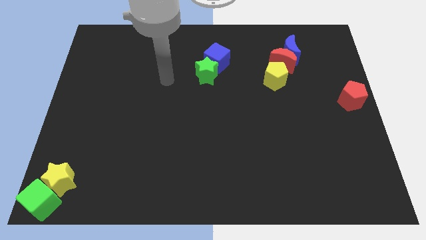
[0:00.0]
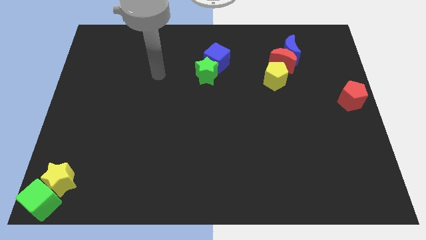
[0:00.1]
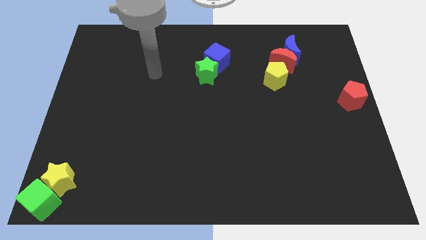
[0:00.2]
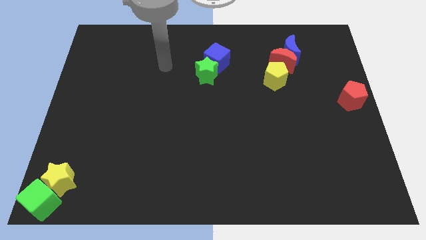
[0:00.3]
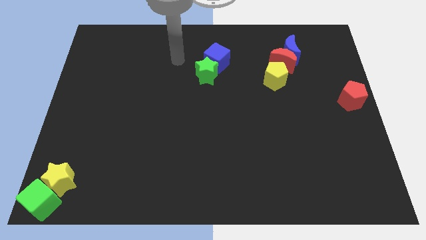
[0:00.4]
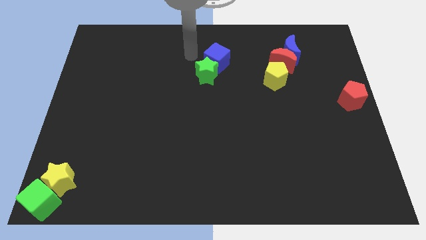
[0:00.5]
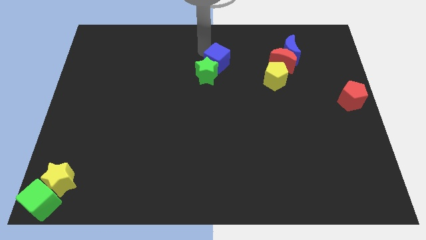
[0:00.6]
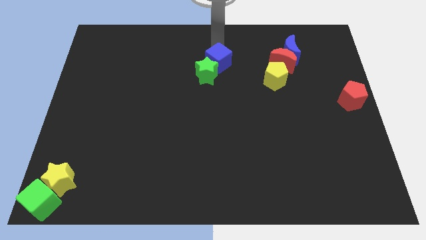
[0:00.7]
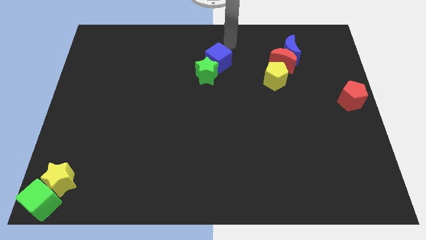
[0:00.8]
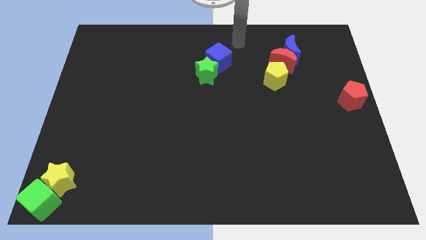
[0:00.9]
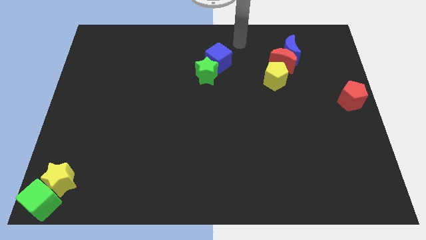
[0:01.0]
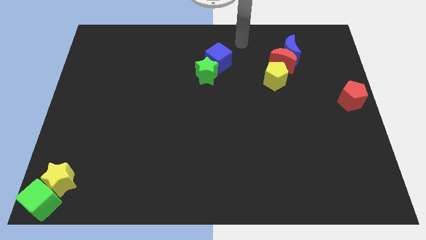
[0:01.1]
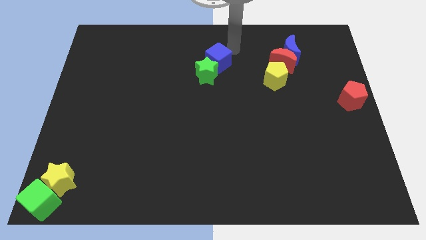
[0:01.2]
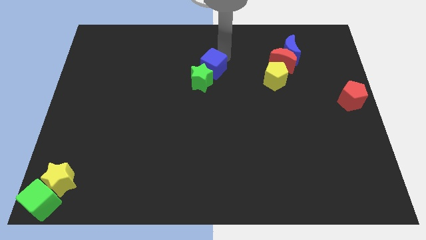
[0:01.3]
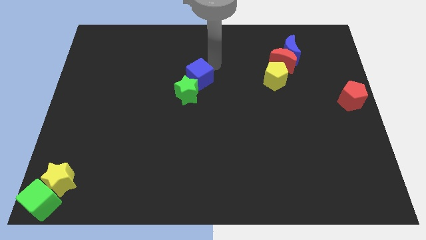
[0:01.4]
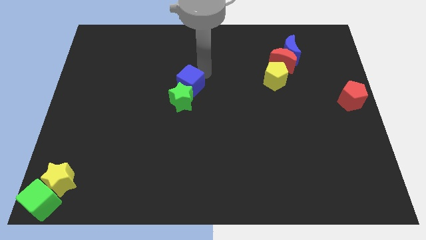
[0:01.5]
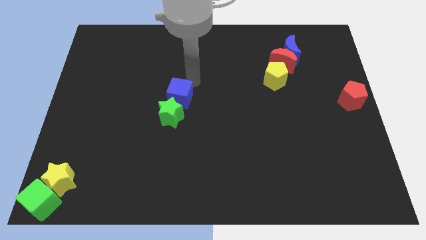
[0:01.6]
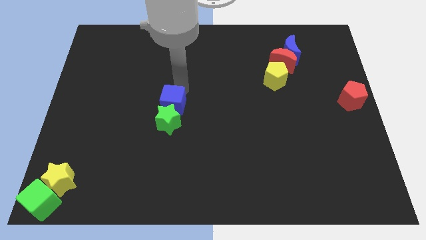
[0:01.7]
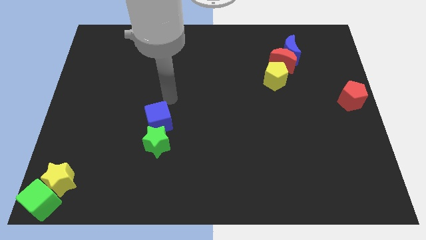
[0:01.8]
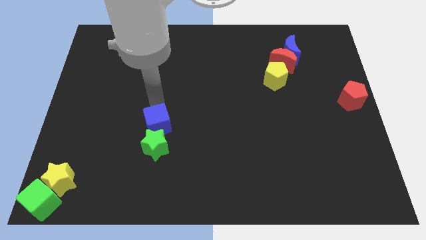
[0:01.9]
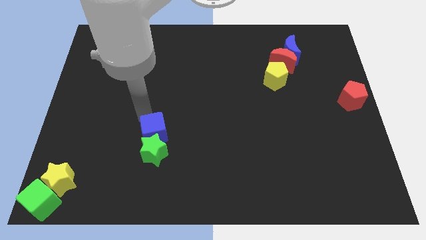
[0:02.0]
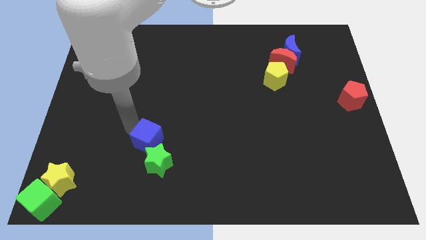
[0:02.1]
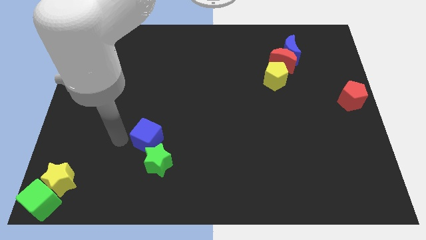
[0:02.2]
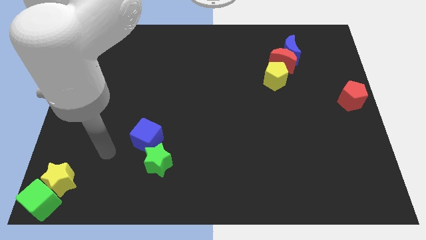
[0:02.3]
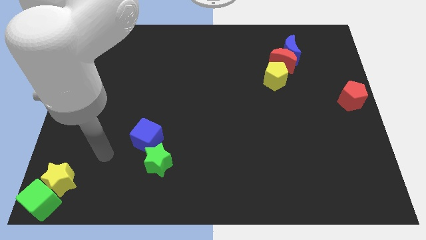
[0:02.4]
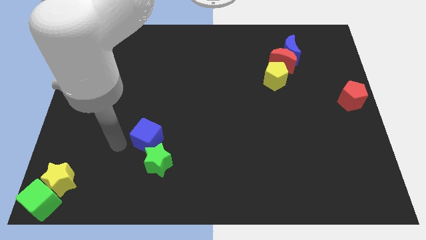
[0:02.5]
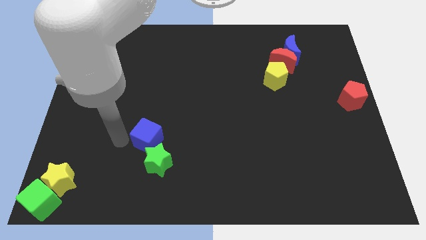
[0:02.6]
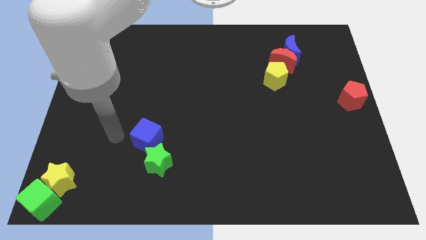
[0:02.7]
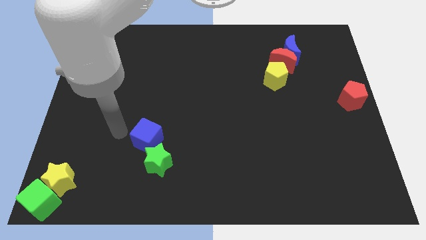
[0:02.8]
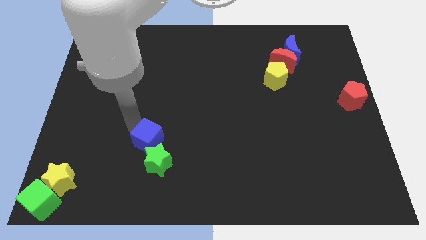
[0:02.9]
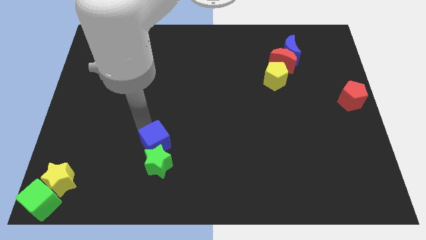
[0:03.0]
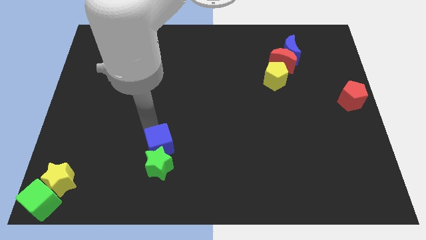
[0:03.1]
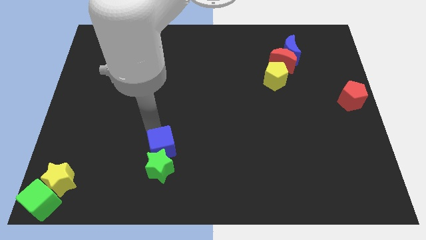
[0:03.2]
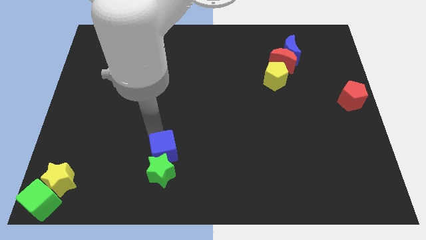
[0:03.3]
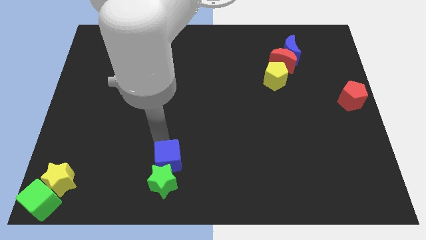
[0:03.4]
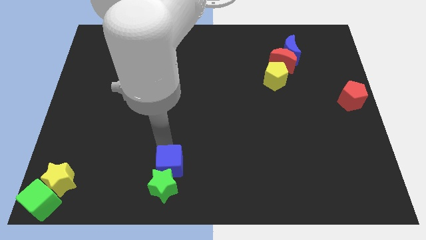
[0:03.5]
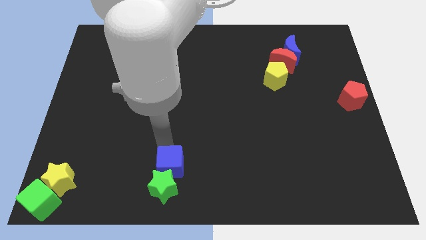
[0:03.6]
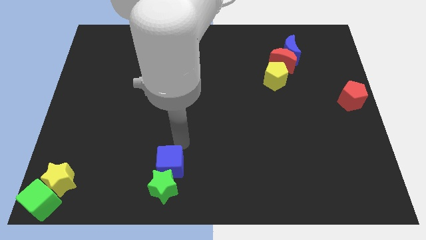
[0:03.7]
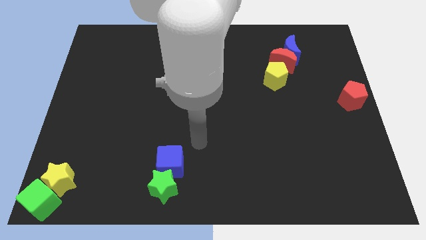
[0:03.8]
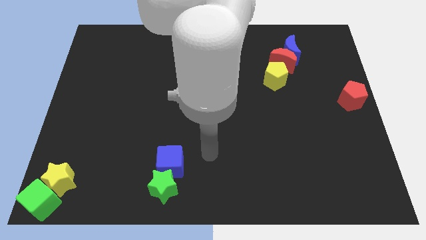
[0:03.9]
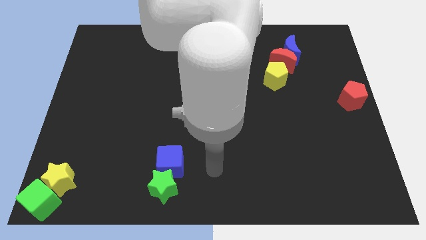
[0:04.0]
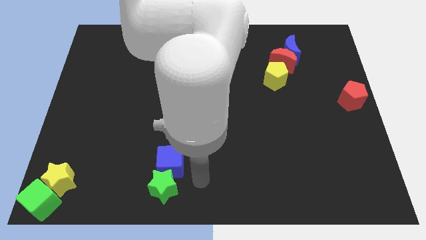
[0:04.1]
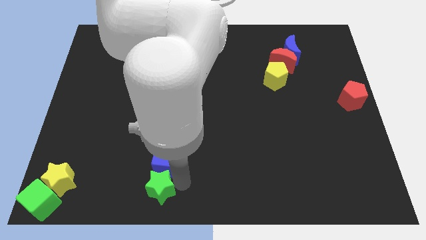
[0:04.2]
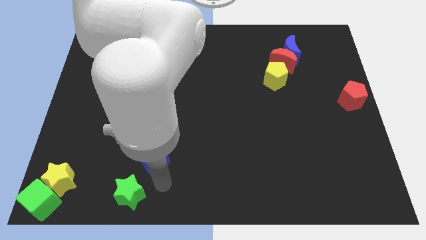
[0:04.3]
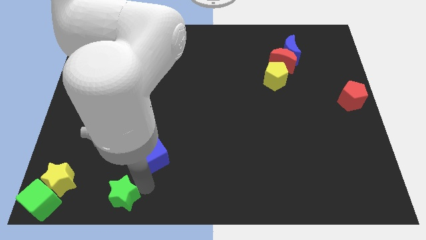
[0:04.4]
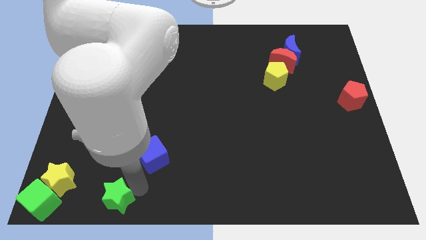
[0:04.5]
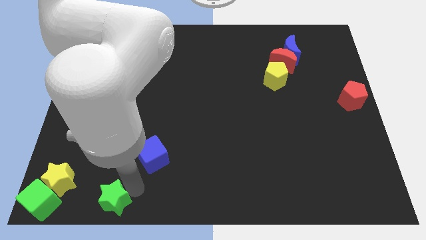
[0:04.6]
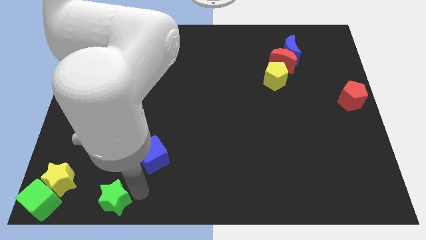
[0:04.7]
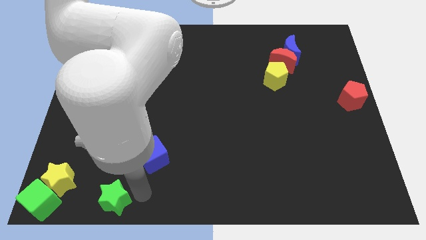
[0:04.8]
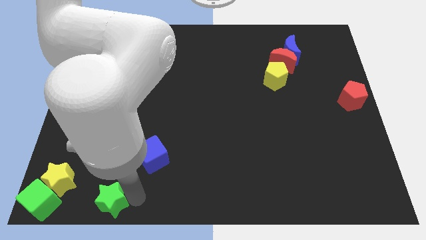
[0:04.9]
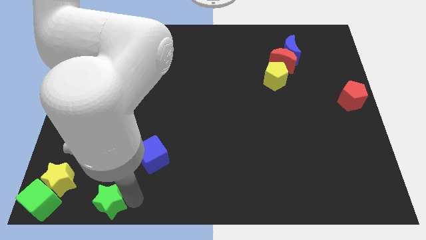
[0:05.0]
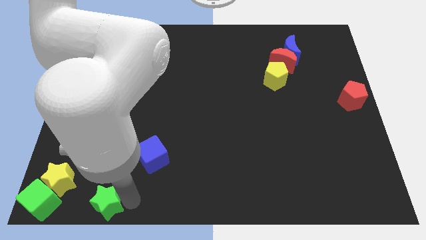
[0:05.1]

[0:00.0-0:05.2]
move the green star with the blue cube

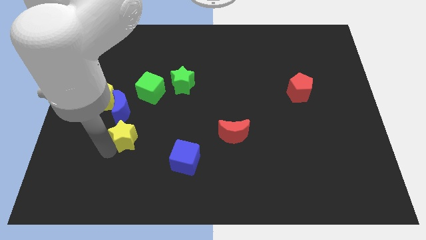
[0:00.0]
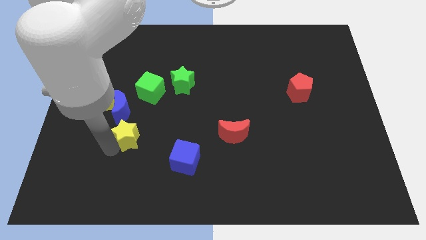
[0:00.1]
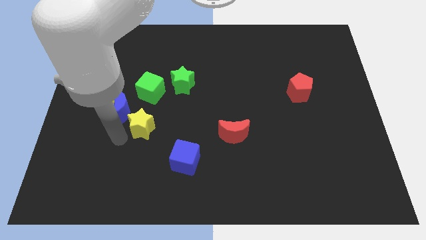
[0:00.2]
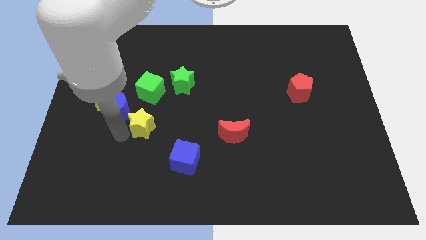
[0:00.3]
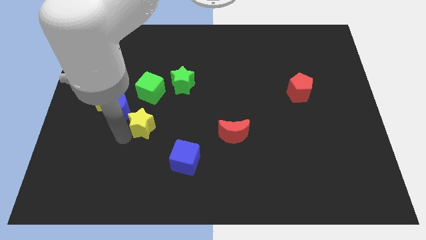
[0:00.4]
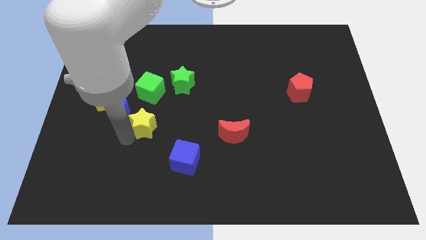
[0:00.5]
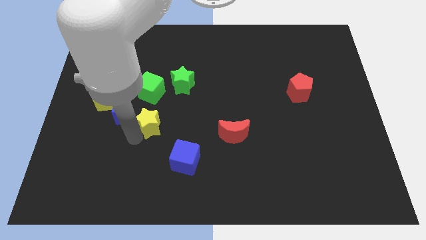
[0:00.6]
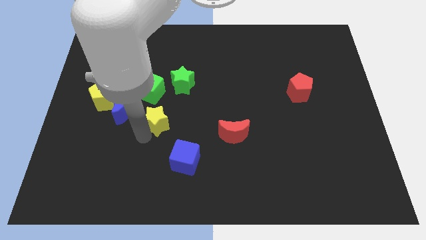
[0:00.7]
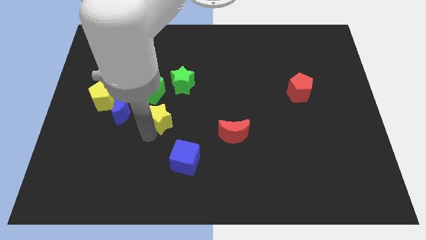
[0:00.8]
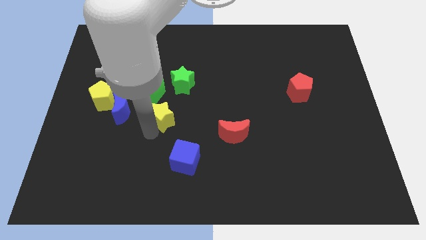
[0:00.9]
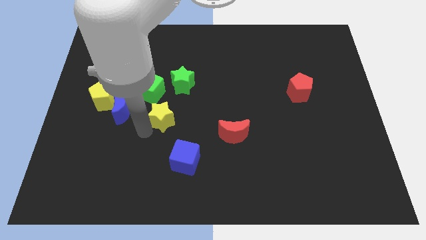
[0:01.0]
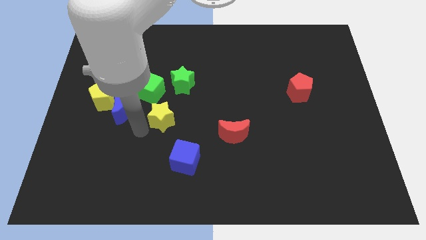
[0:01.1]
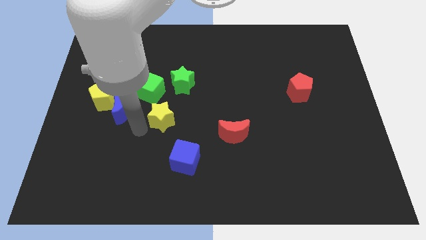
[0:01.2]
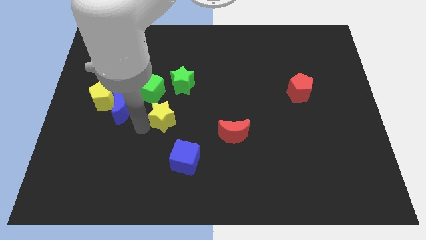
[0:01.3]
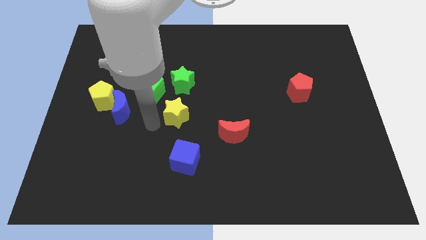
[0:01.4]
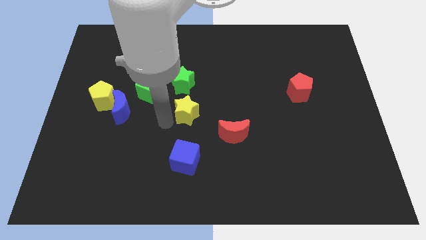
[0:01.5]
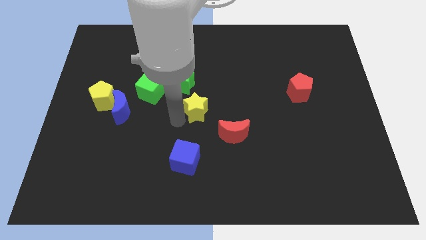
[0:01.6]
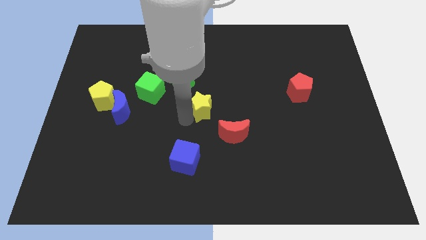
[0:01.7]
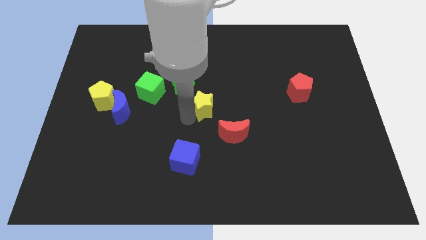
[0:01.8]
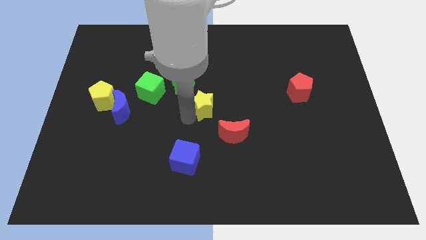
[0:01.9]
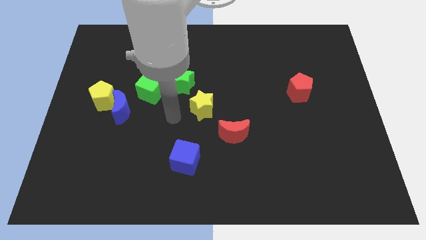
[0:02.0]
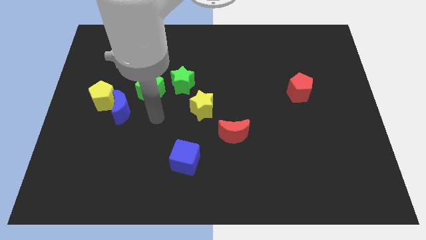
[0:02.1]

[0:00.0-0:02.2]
place the yellow star in between green star and red crescent

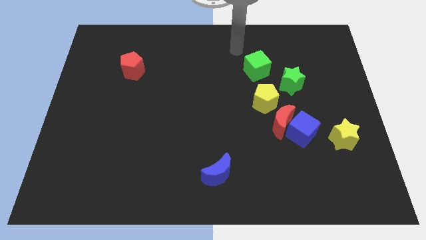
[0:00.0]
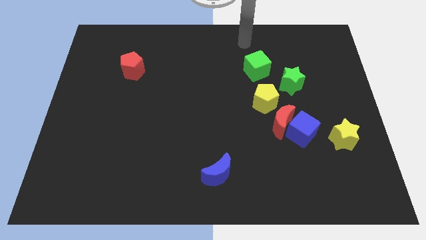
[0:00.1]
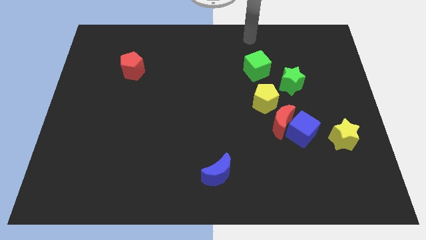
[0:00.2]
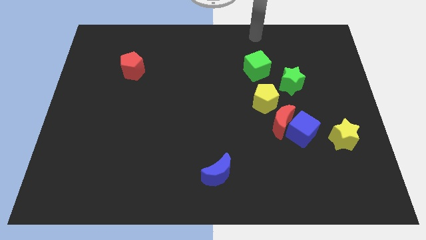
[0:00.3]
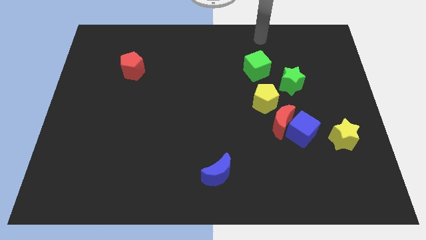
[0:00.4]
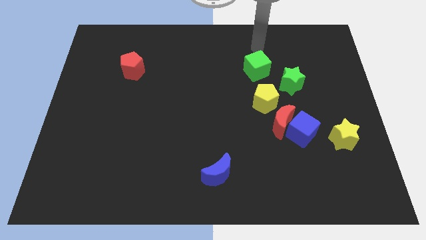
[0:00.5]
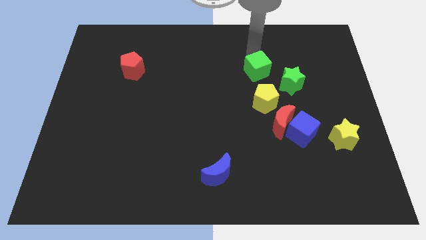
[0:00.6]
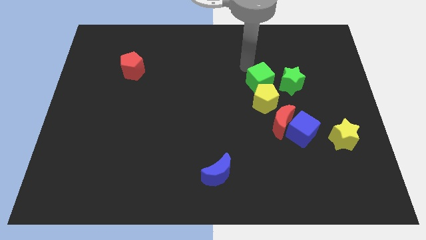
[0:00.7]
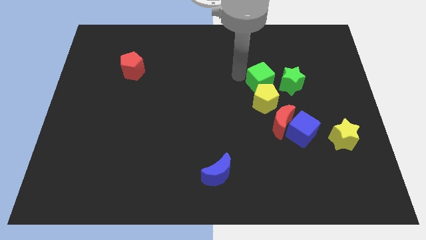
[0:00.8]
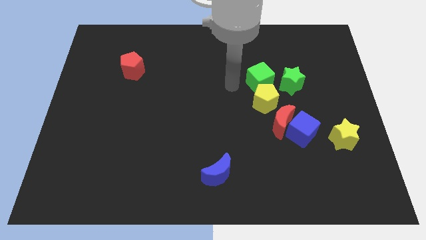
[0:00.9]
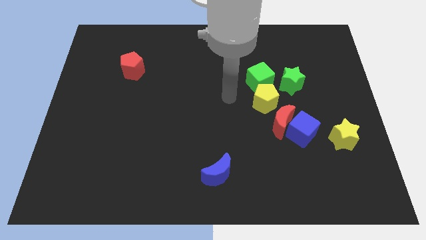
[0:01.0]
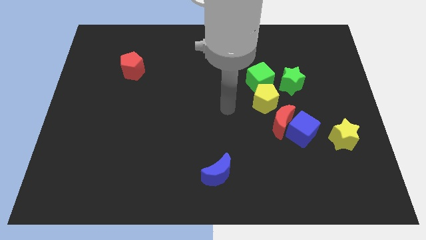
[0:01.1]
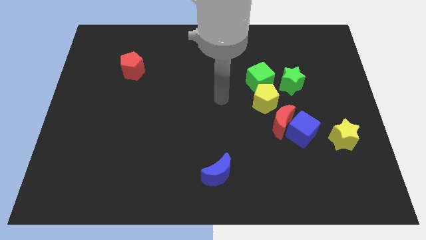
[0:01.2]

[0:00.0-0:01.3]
push the green cube slightly downwards

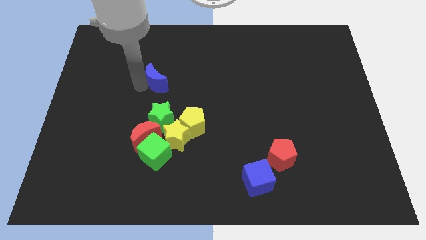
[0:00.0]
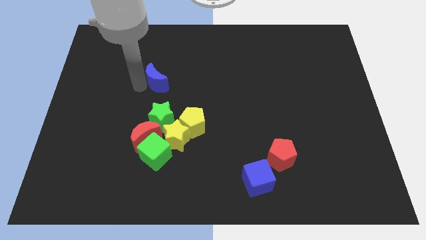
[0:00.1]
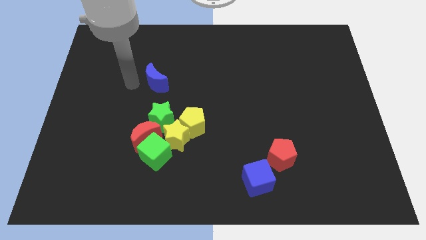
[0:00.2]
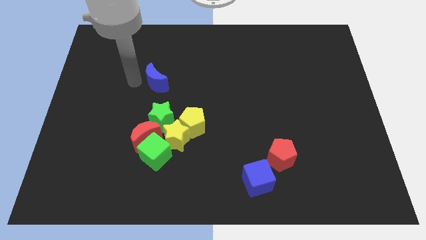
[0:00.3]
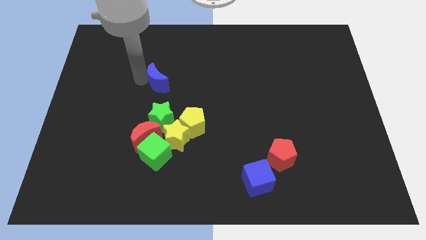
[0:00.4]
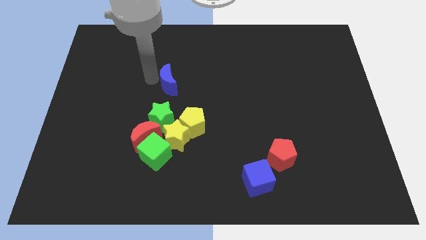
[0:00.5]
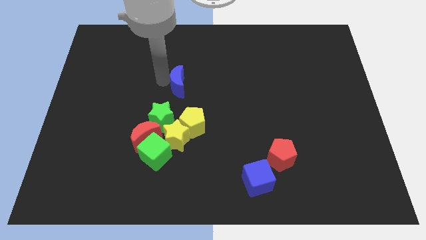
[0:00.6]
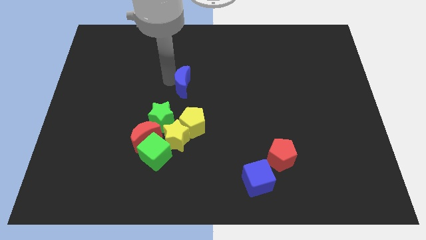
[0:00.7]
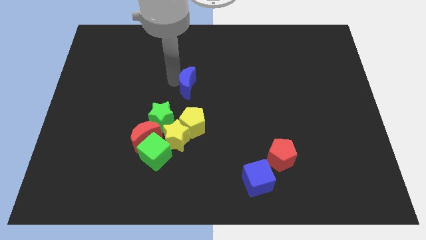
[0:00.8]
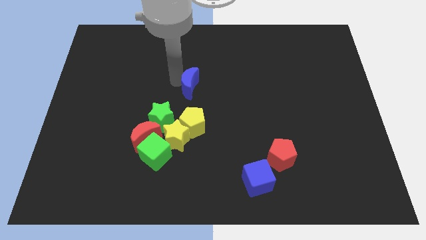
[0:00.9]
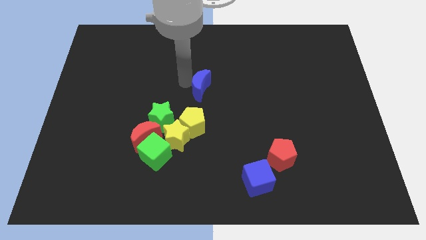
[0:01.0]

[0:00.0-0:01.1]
place the blue moon above the yellow pentagon
